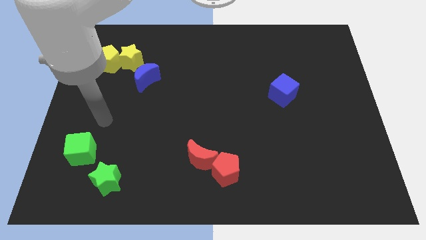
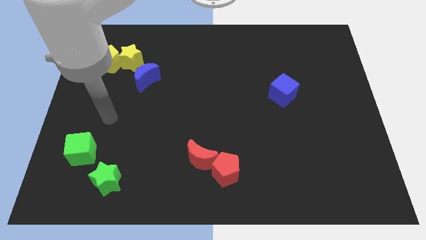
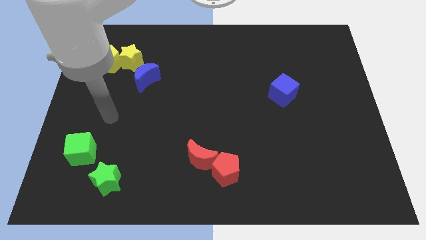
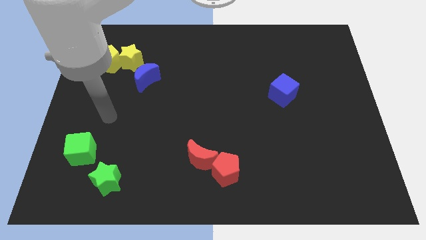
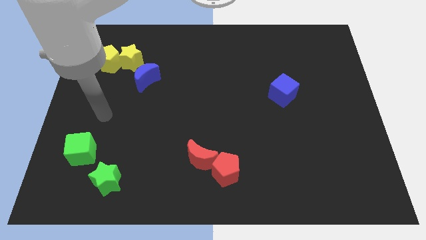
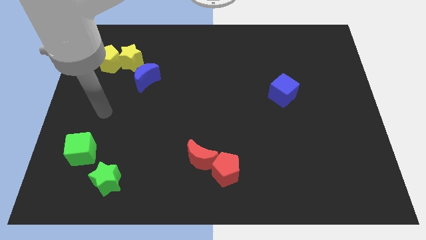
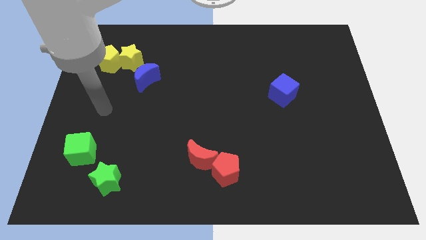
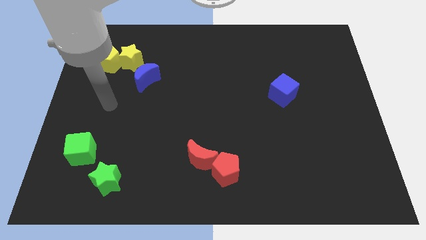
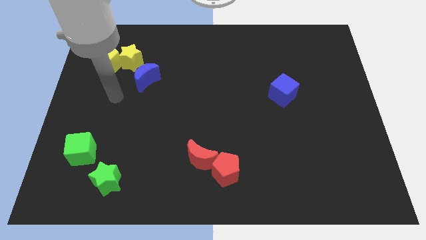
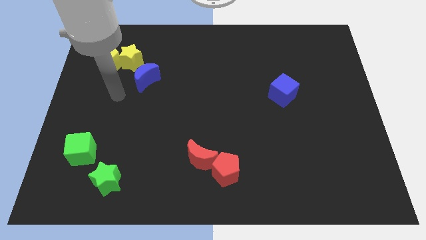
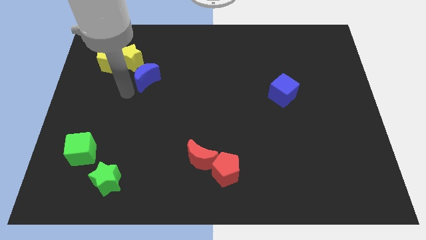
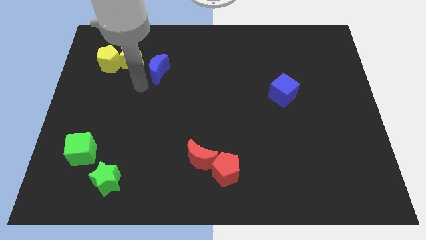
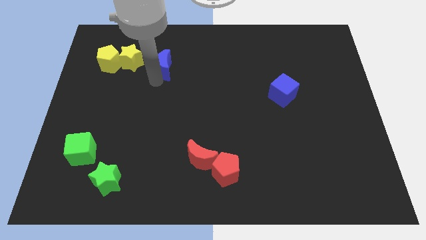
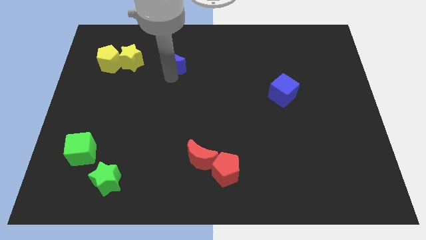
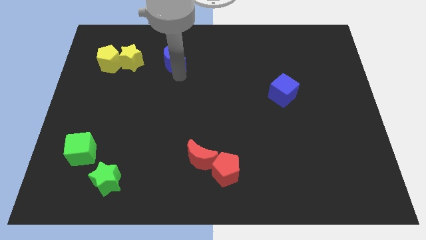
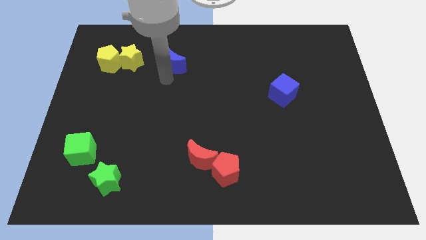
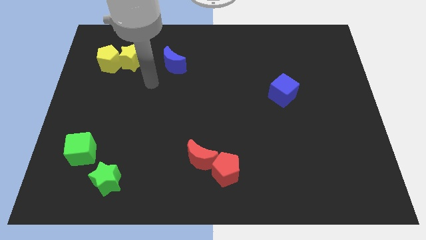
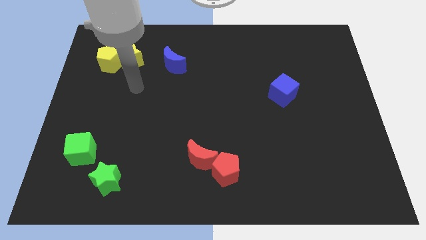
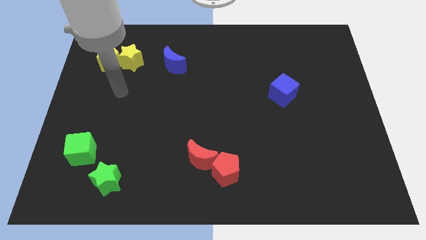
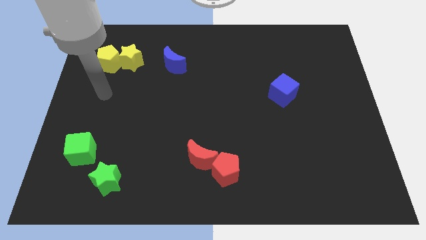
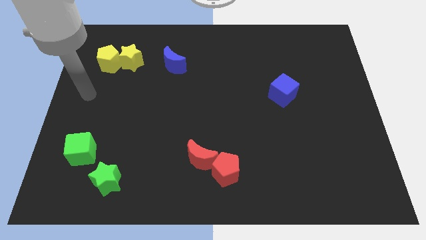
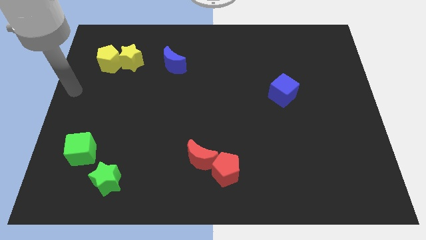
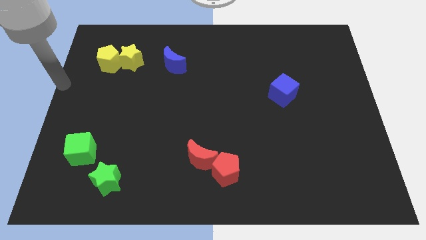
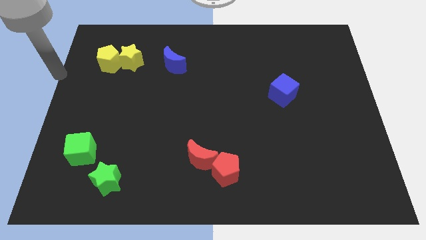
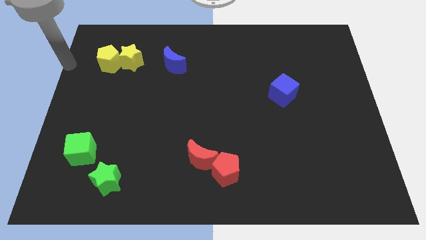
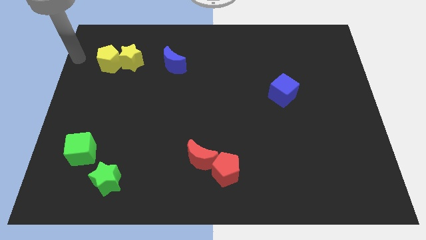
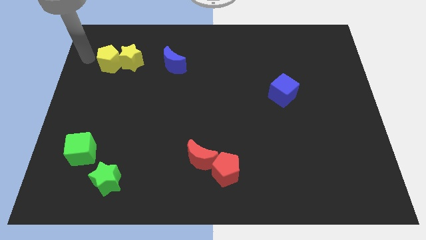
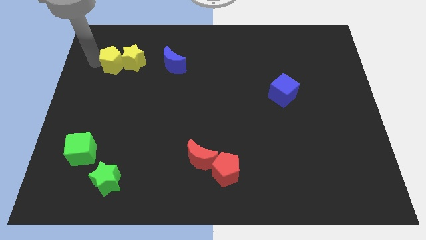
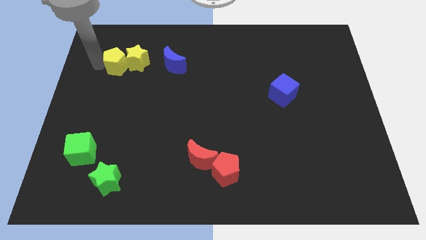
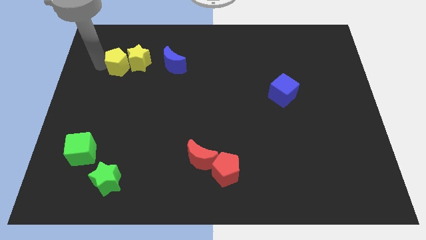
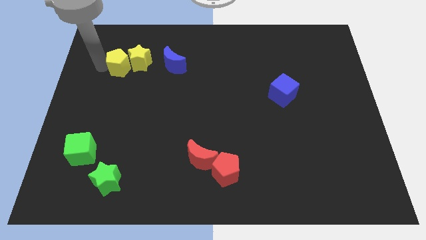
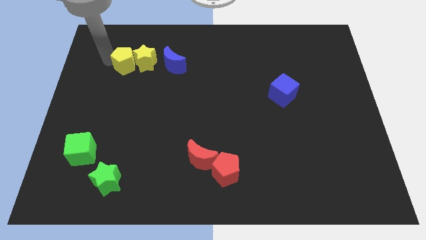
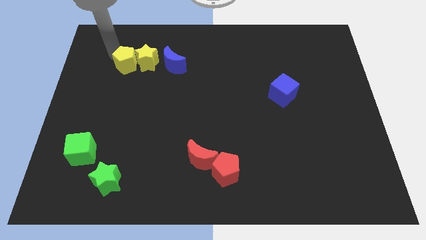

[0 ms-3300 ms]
separate blue moon away from the yellow blocks

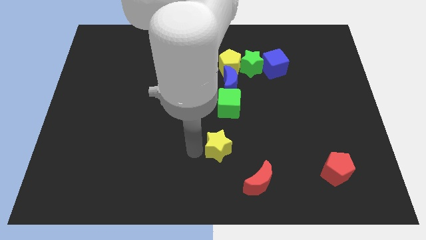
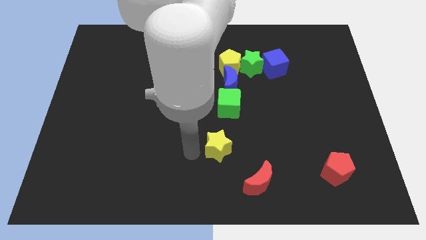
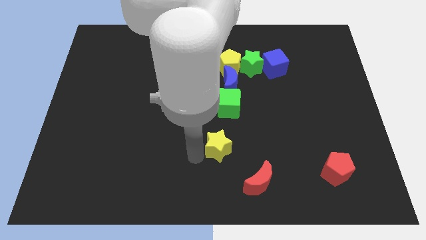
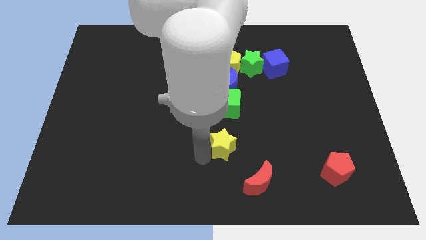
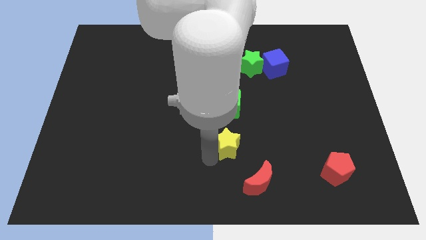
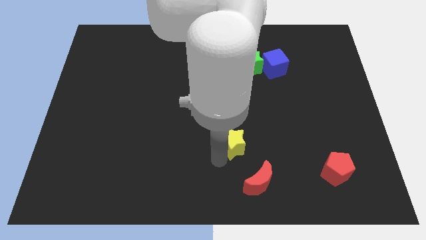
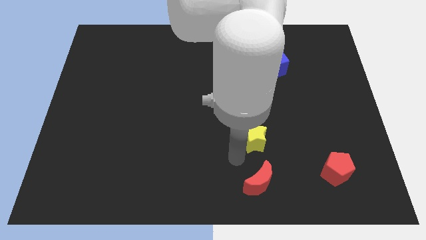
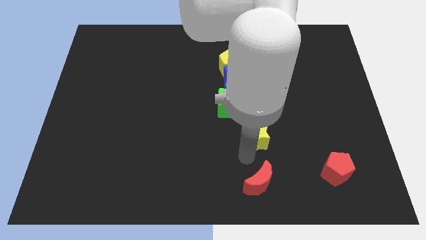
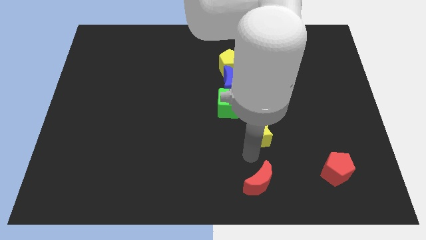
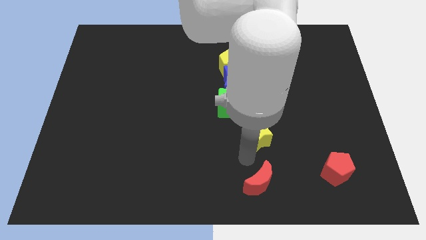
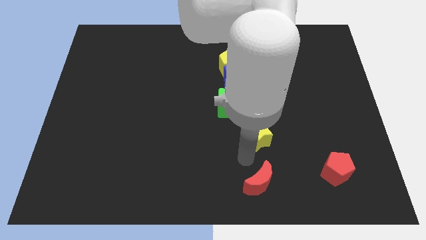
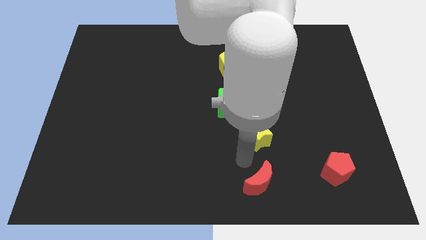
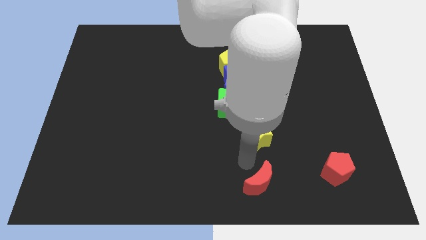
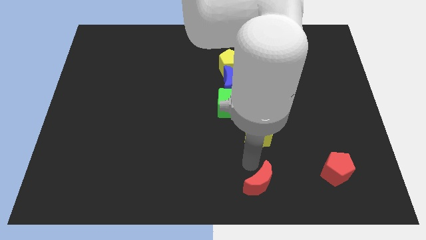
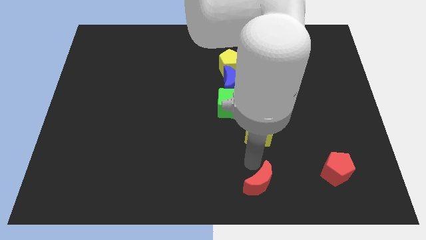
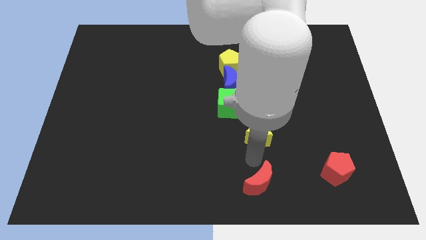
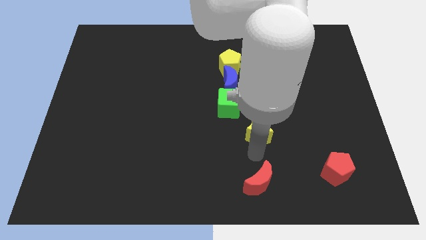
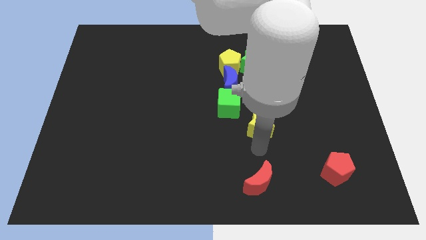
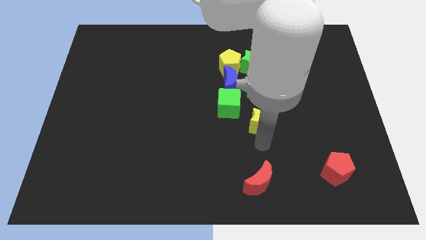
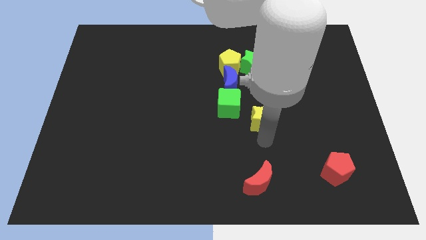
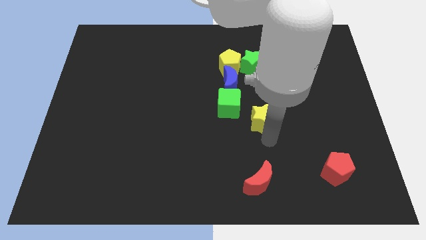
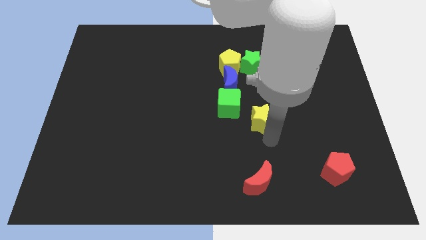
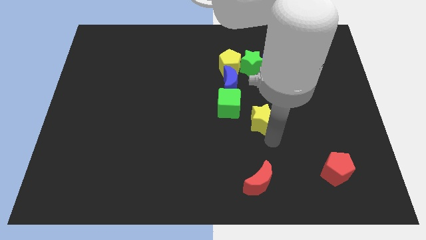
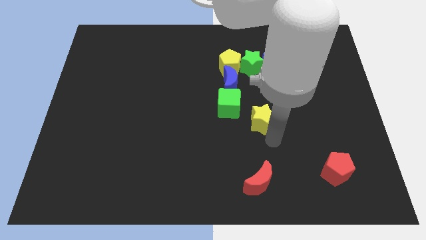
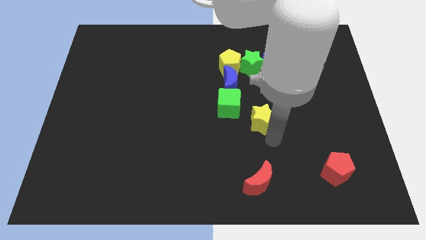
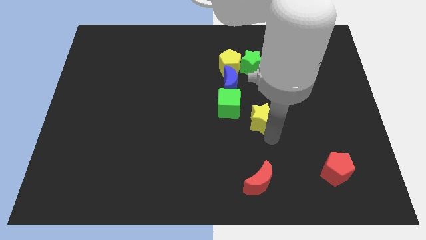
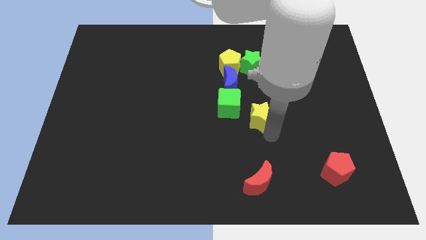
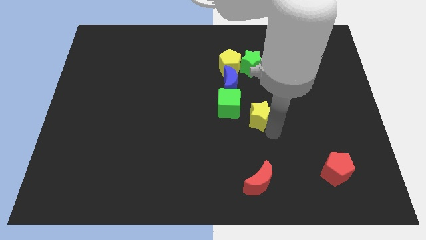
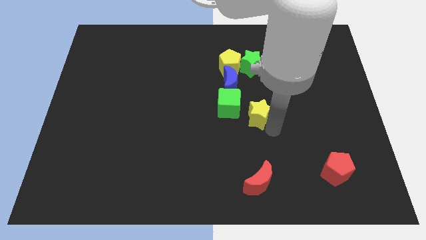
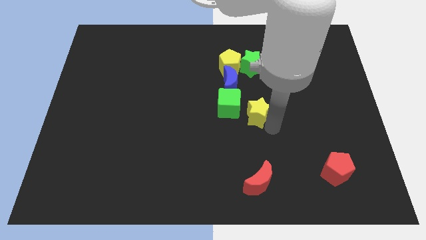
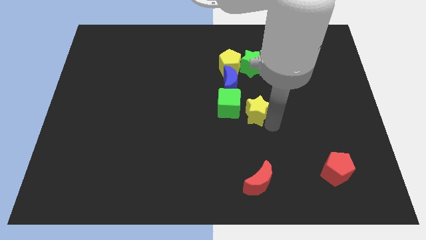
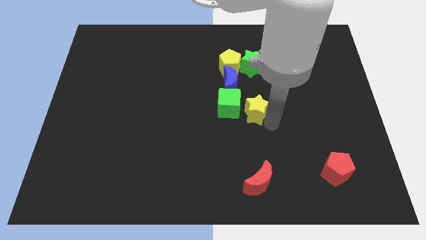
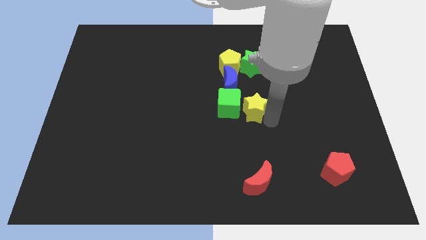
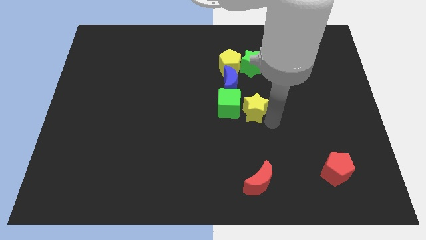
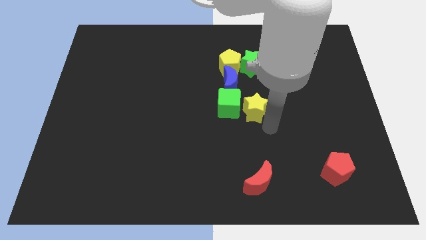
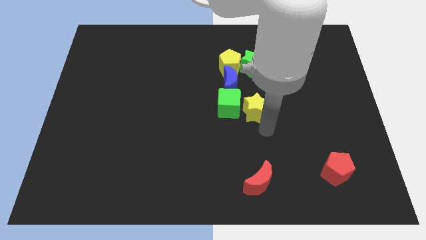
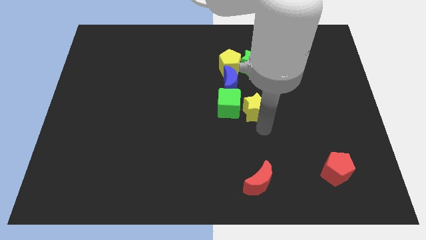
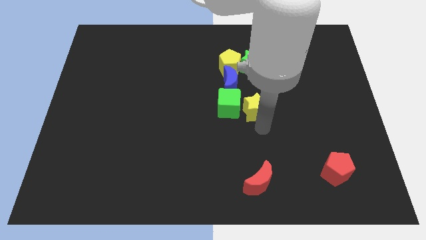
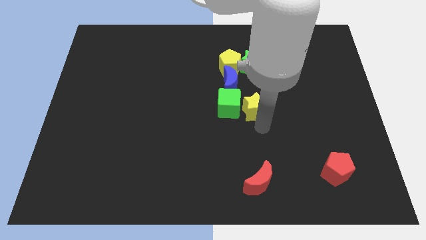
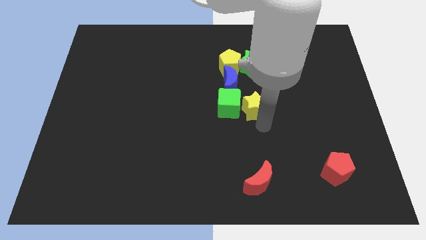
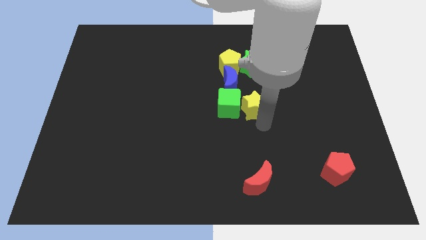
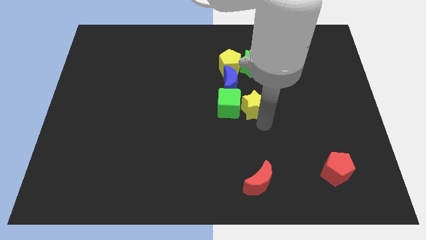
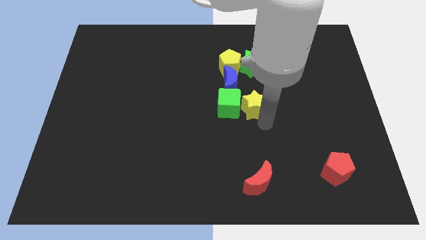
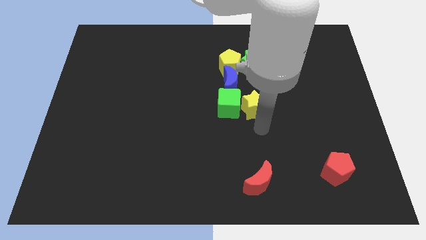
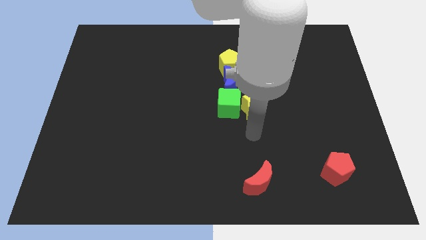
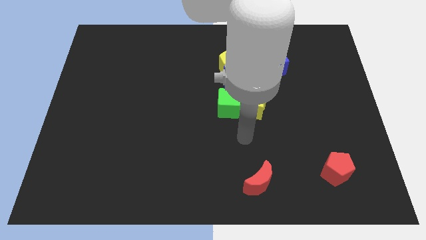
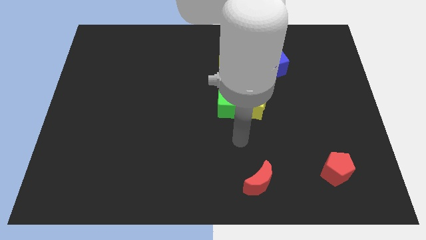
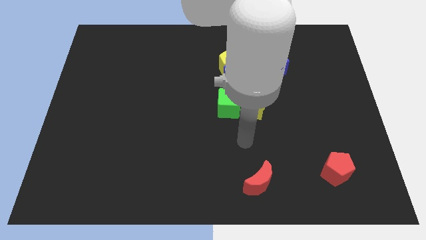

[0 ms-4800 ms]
push the yellow star right to the green cube

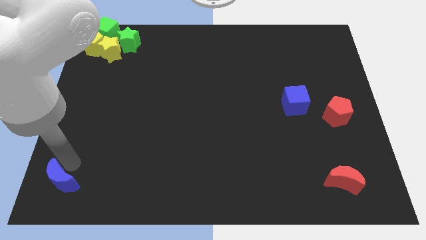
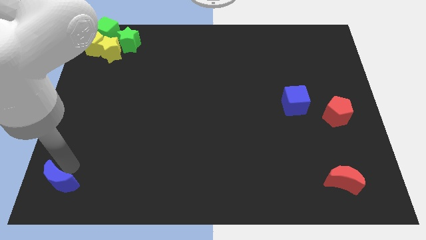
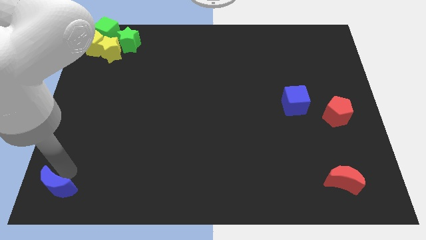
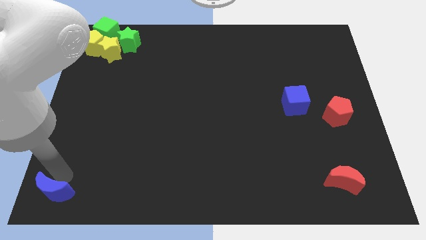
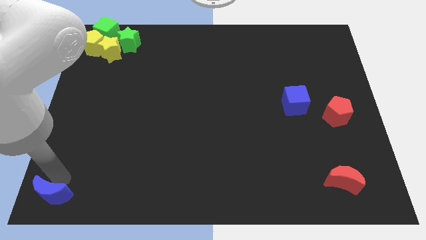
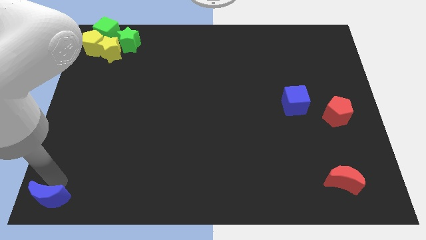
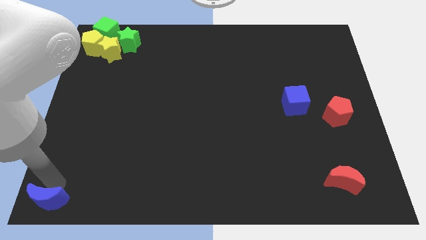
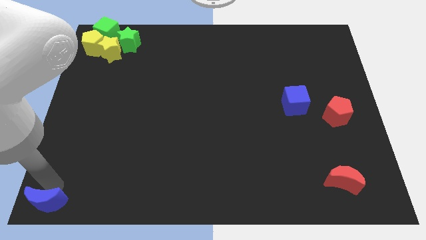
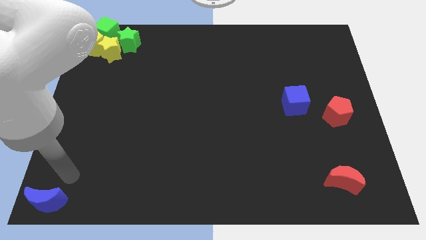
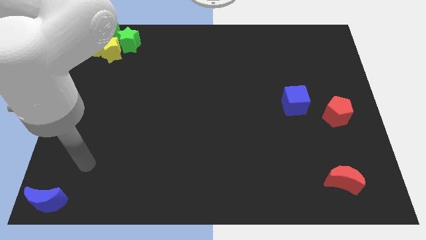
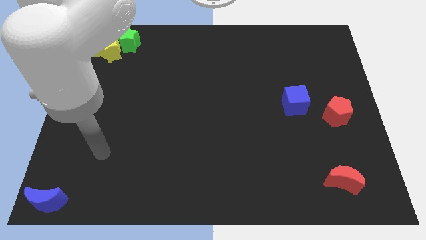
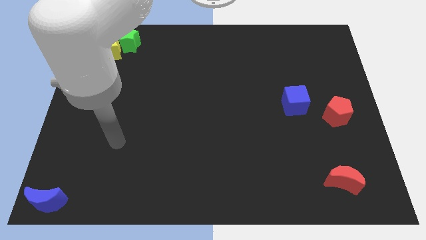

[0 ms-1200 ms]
move the blue crescent to the bottom left corner
